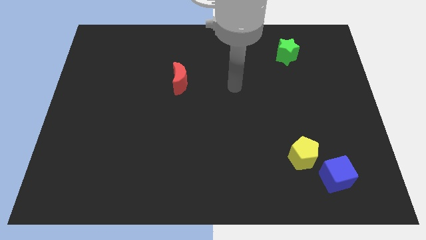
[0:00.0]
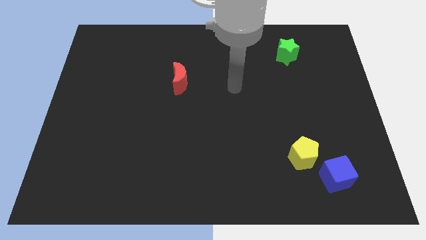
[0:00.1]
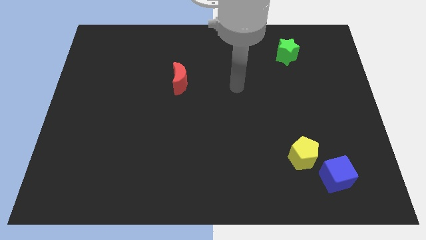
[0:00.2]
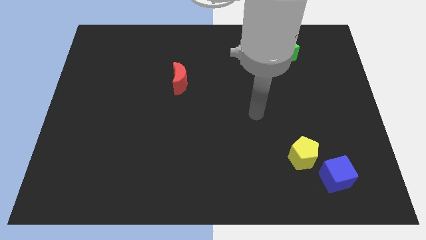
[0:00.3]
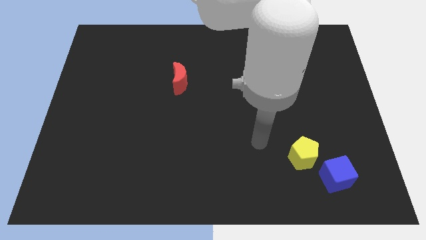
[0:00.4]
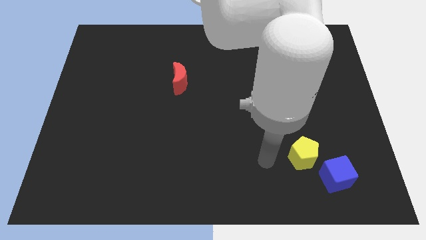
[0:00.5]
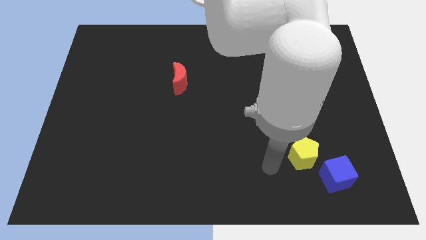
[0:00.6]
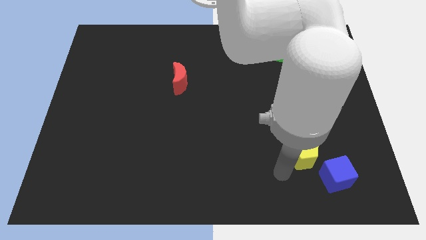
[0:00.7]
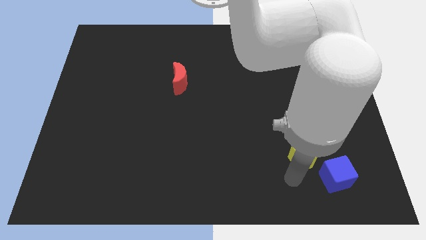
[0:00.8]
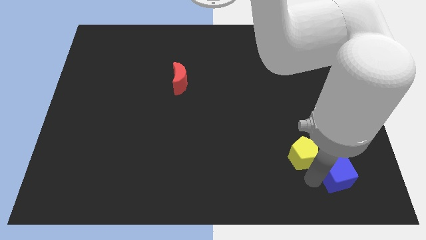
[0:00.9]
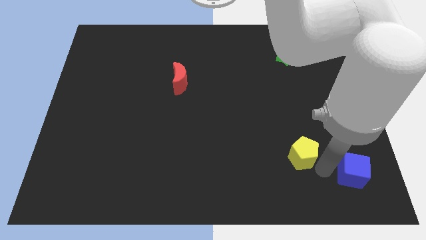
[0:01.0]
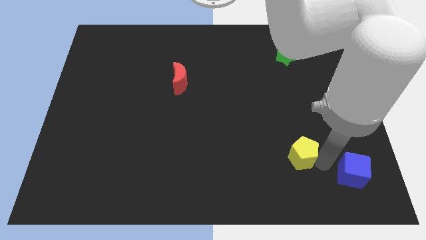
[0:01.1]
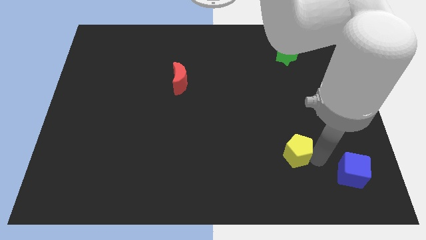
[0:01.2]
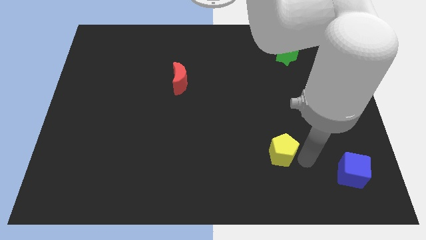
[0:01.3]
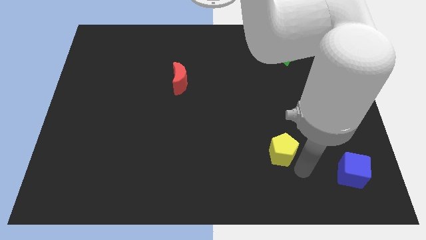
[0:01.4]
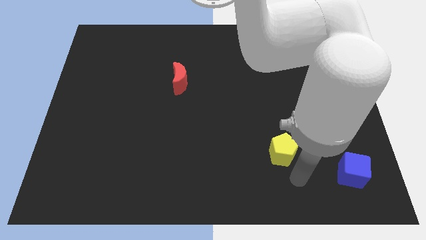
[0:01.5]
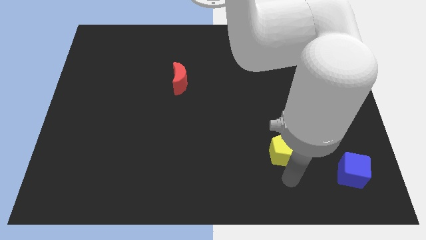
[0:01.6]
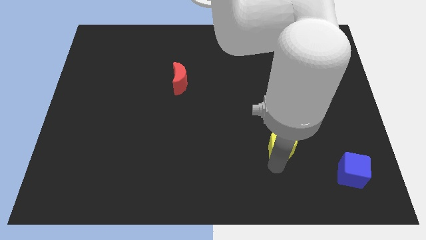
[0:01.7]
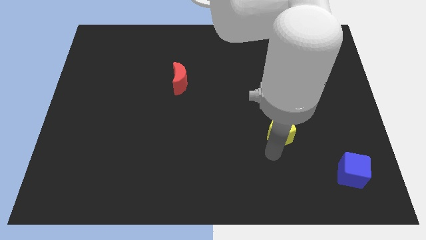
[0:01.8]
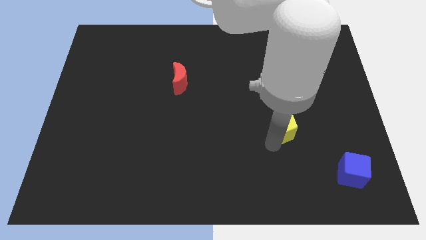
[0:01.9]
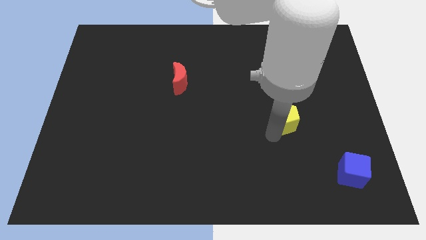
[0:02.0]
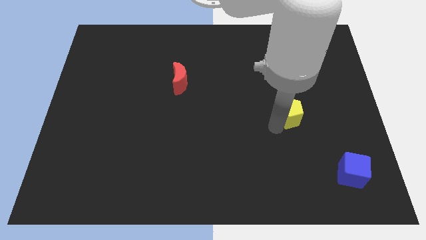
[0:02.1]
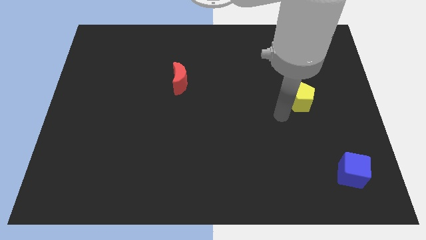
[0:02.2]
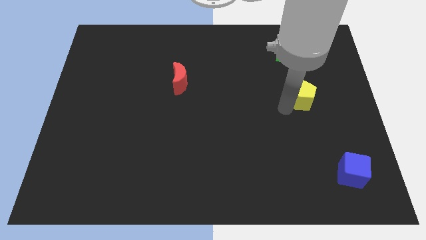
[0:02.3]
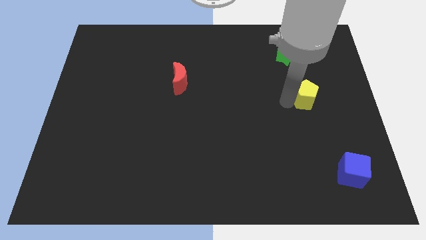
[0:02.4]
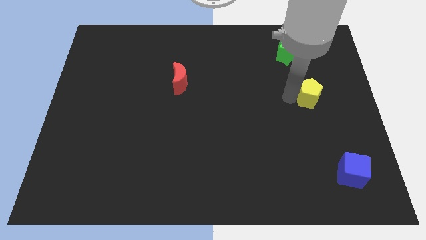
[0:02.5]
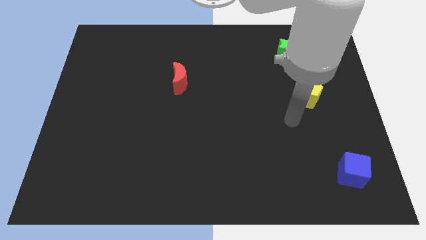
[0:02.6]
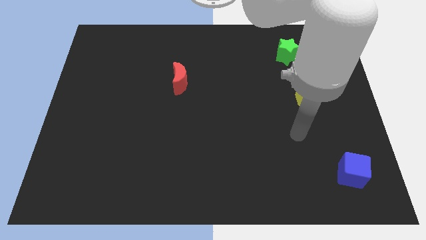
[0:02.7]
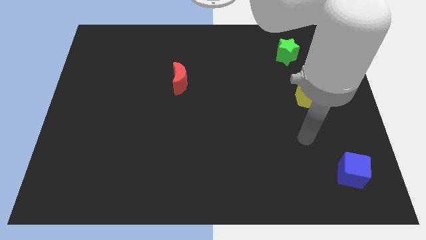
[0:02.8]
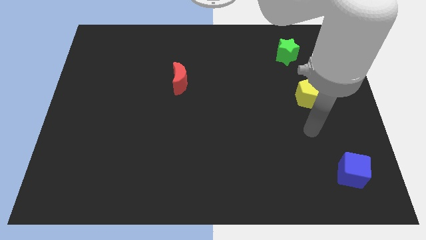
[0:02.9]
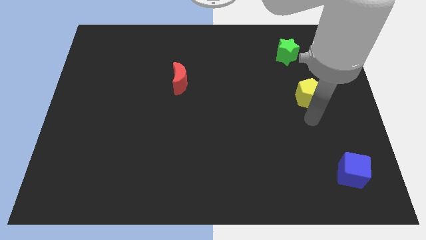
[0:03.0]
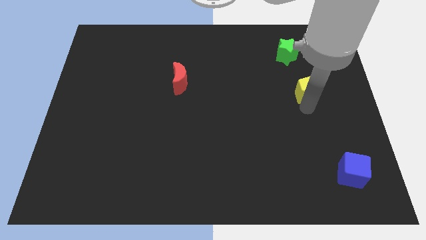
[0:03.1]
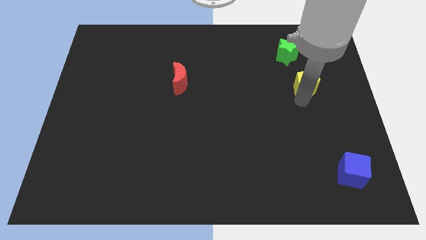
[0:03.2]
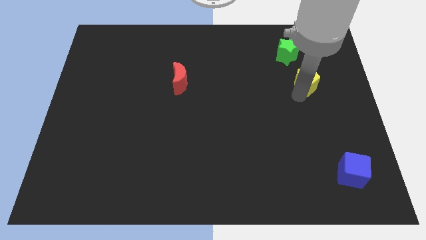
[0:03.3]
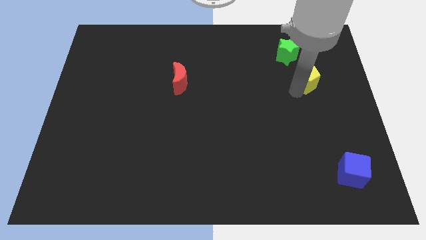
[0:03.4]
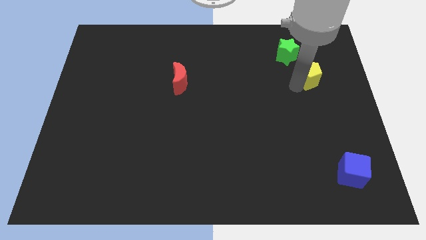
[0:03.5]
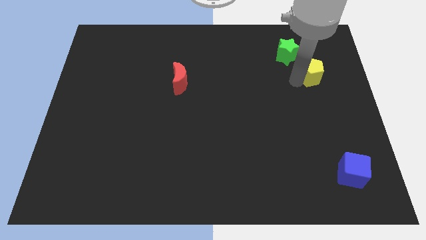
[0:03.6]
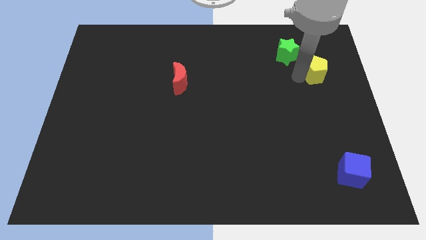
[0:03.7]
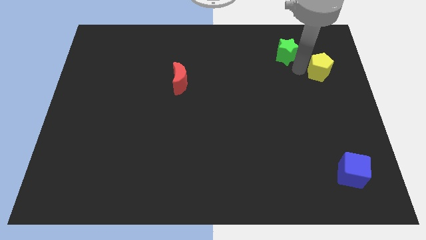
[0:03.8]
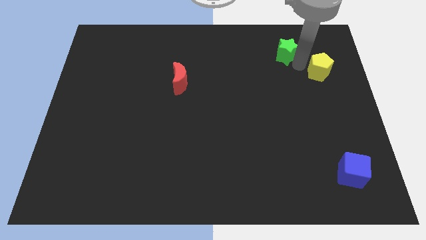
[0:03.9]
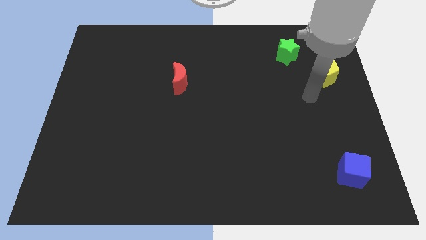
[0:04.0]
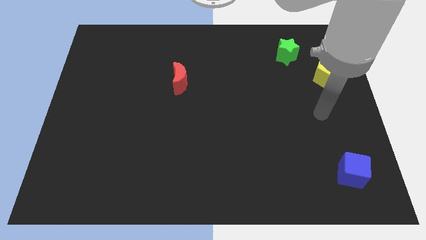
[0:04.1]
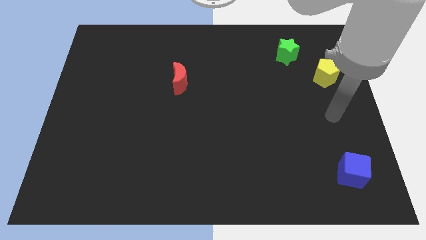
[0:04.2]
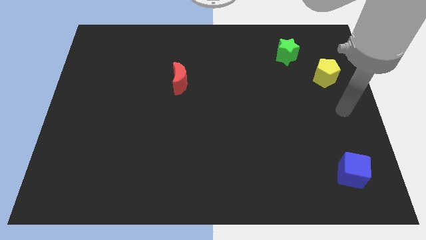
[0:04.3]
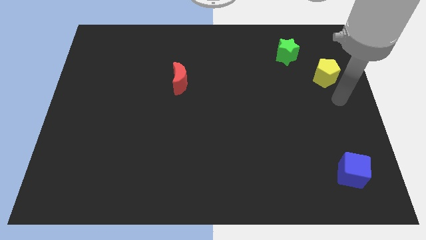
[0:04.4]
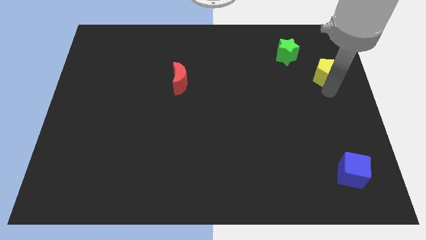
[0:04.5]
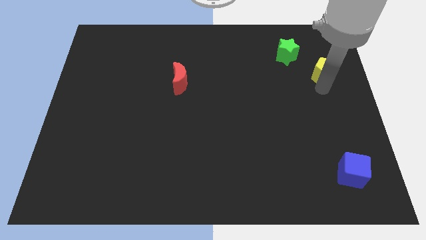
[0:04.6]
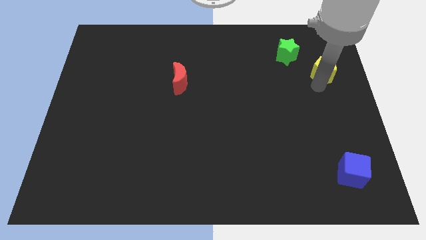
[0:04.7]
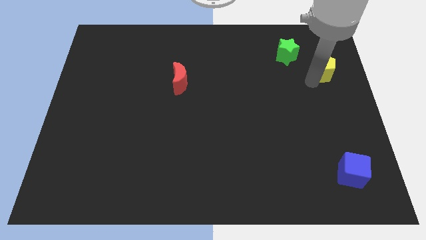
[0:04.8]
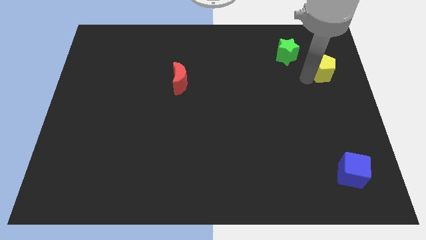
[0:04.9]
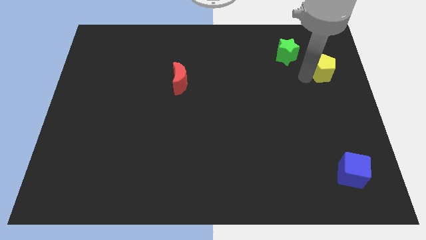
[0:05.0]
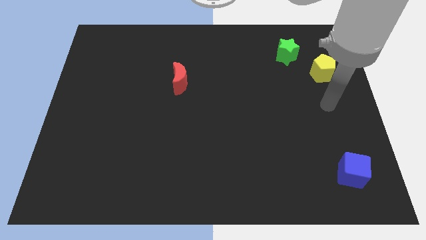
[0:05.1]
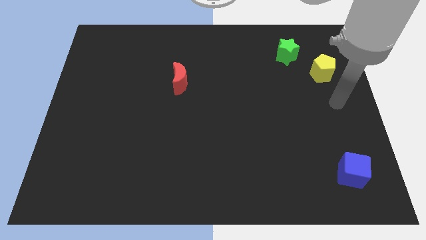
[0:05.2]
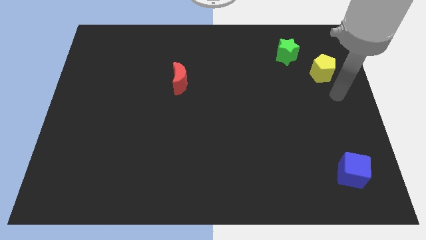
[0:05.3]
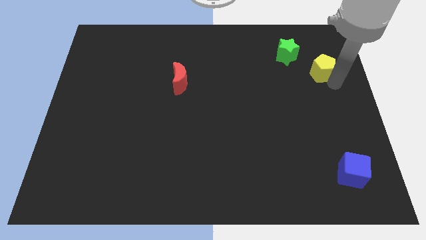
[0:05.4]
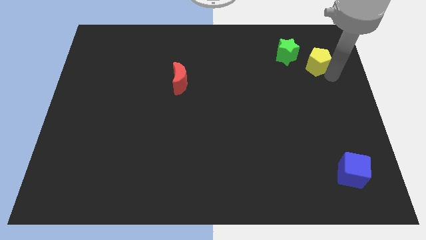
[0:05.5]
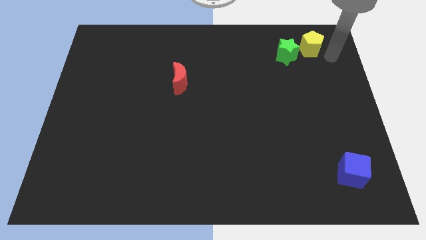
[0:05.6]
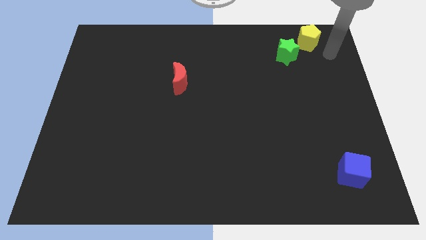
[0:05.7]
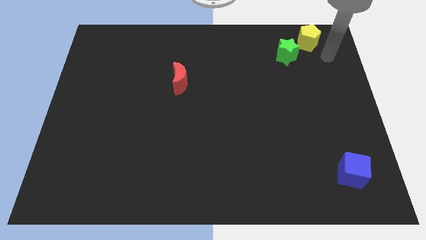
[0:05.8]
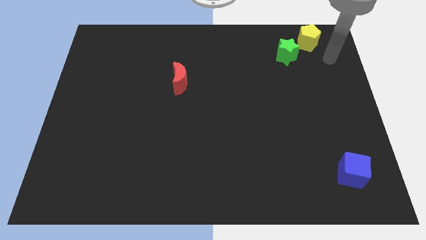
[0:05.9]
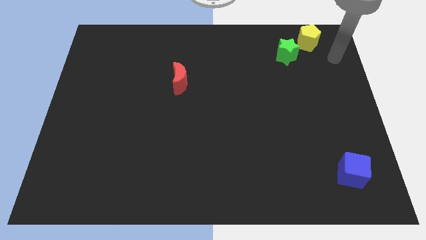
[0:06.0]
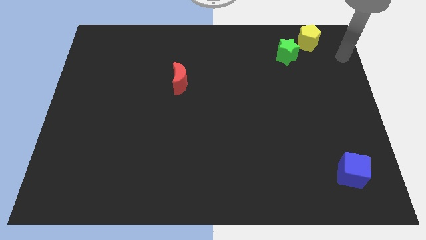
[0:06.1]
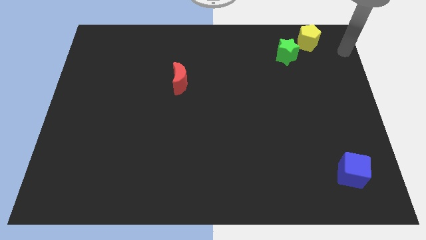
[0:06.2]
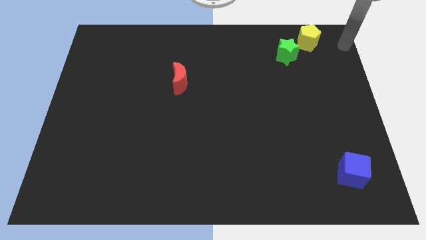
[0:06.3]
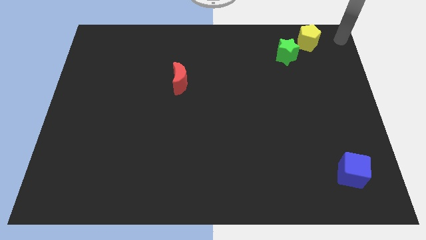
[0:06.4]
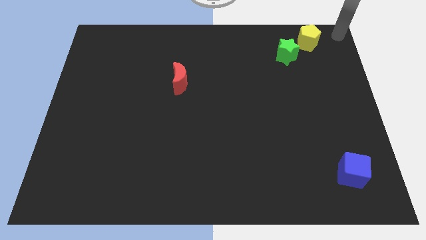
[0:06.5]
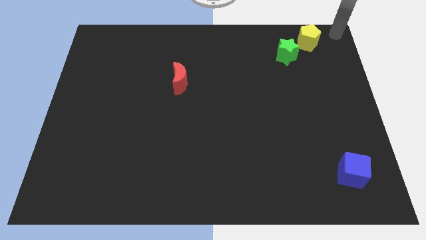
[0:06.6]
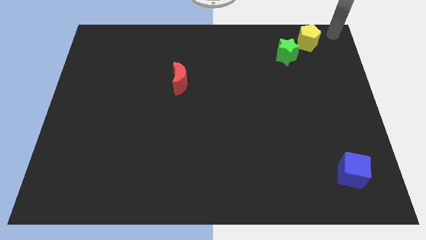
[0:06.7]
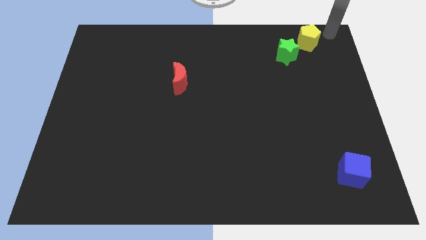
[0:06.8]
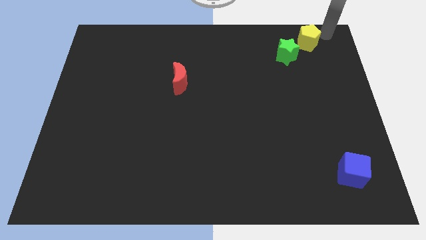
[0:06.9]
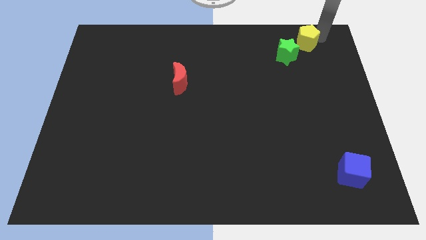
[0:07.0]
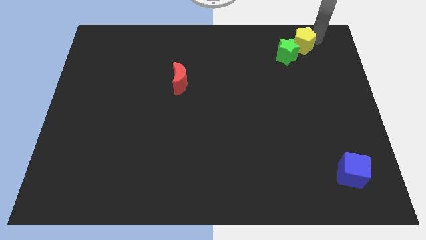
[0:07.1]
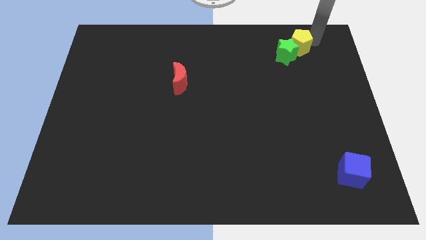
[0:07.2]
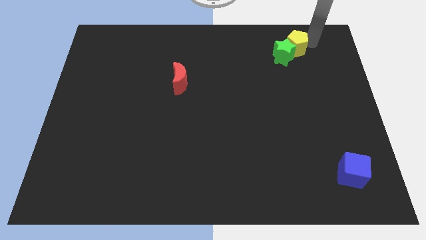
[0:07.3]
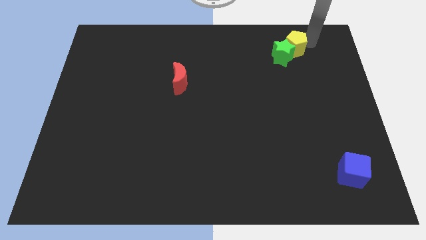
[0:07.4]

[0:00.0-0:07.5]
move the yellow pentagon towards the green block

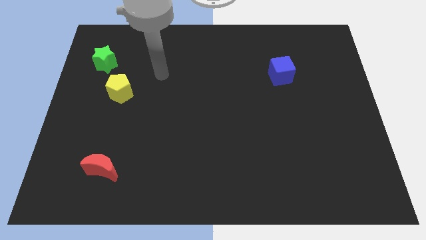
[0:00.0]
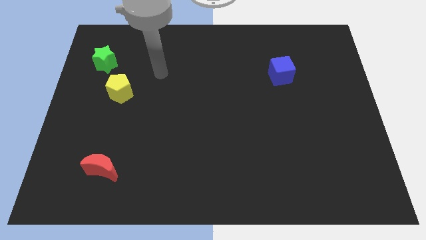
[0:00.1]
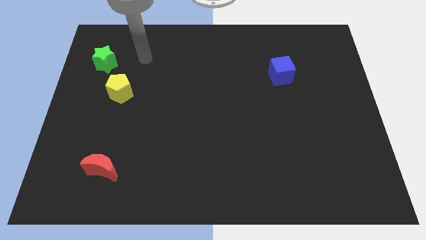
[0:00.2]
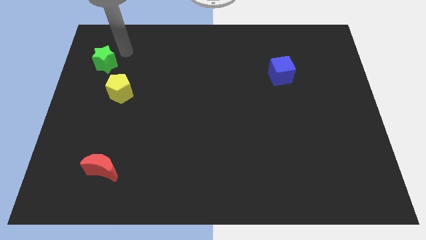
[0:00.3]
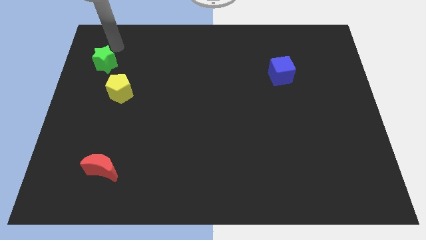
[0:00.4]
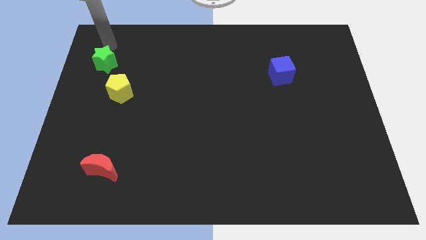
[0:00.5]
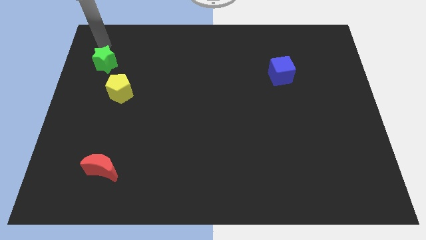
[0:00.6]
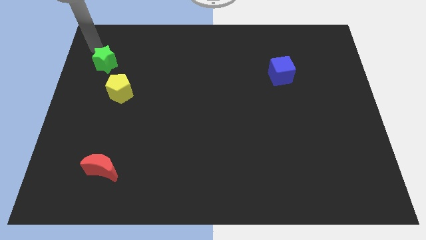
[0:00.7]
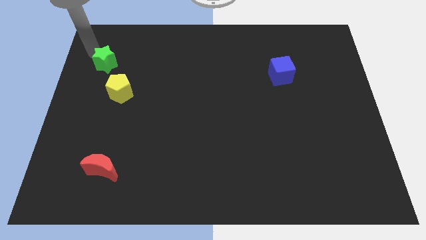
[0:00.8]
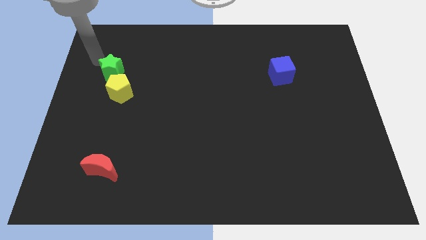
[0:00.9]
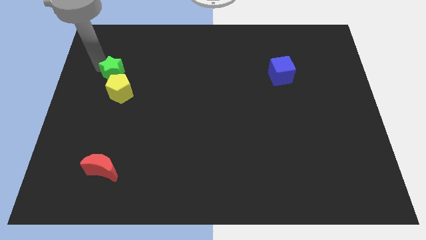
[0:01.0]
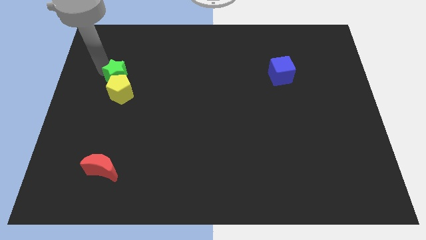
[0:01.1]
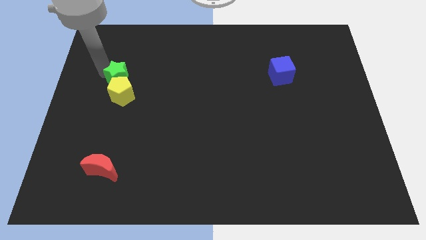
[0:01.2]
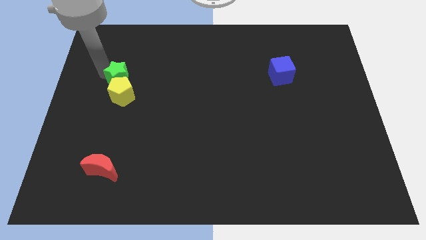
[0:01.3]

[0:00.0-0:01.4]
slide the green star close to the yellow pentagon
